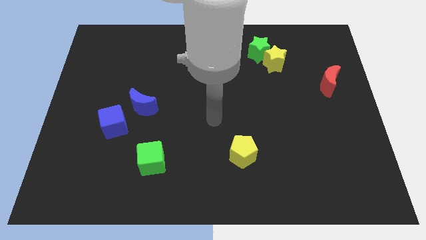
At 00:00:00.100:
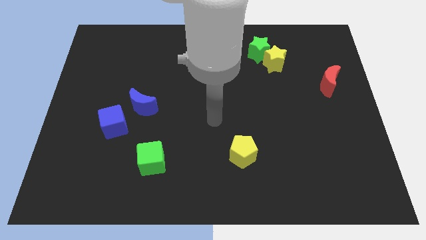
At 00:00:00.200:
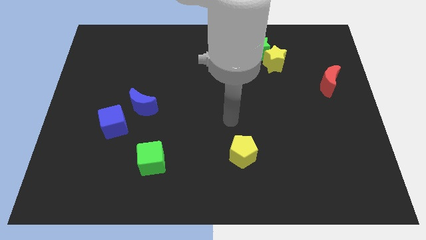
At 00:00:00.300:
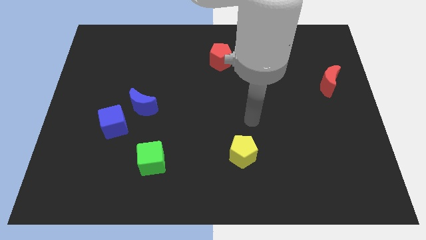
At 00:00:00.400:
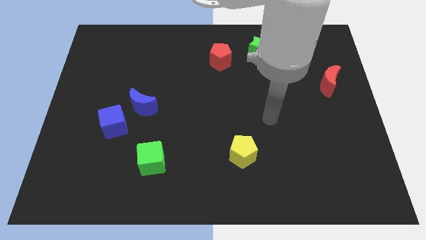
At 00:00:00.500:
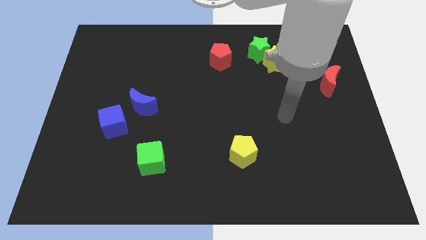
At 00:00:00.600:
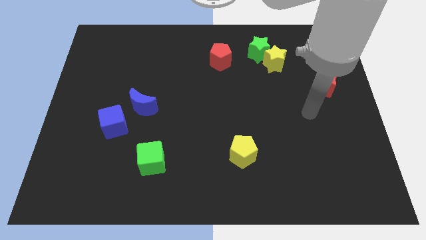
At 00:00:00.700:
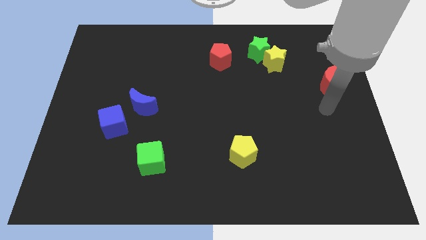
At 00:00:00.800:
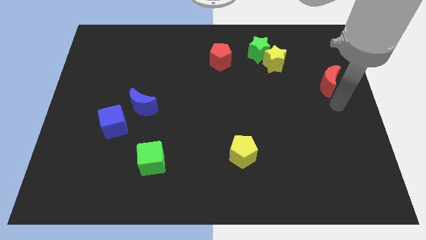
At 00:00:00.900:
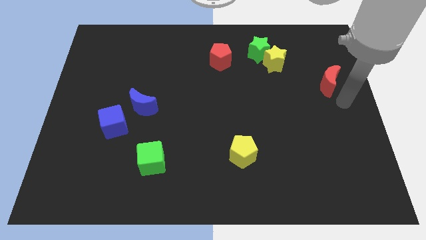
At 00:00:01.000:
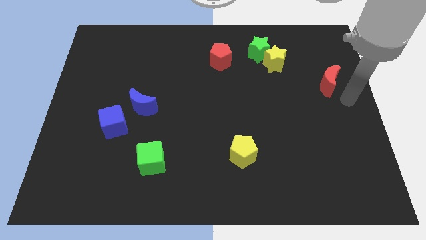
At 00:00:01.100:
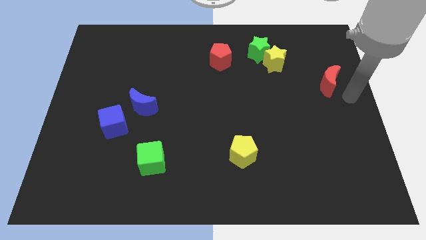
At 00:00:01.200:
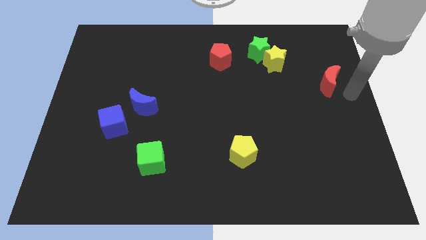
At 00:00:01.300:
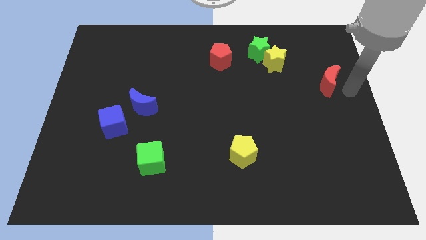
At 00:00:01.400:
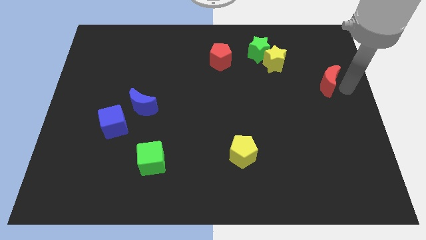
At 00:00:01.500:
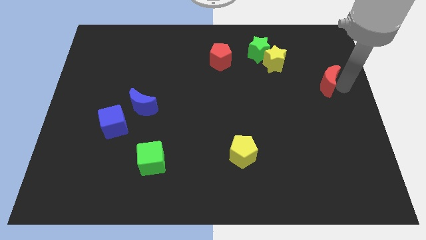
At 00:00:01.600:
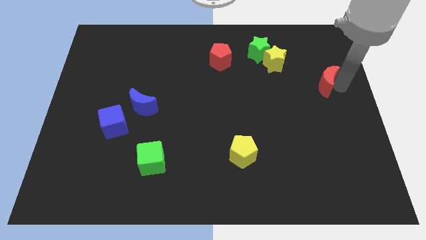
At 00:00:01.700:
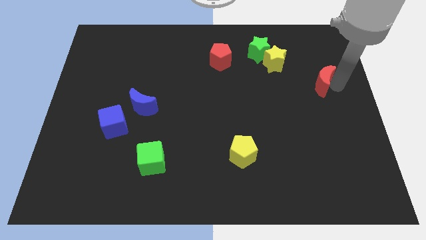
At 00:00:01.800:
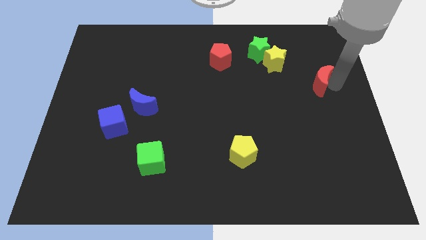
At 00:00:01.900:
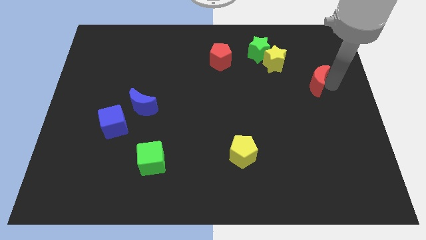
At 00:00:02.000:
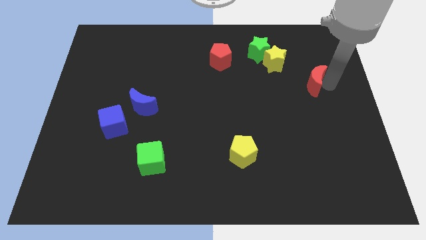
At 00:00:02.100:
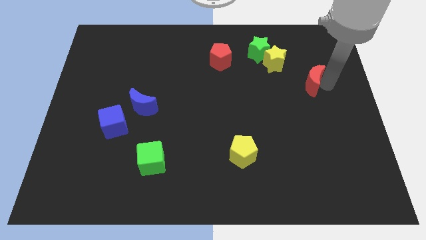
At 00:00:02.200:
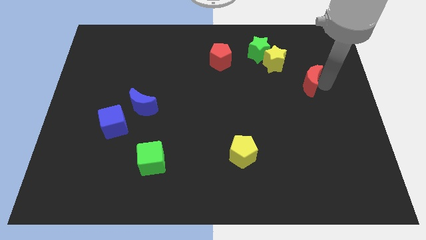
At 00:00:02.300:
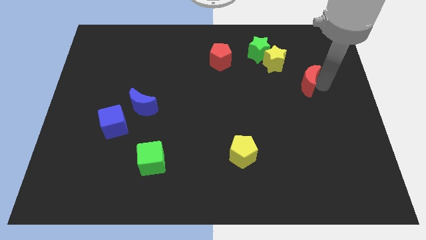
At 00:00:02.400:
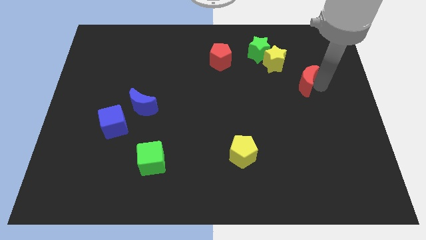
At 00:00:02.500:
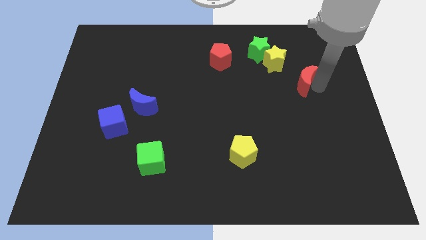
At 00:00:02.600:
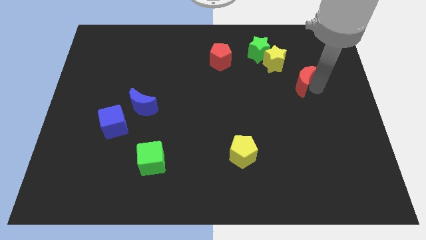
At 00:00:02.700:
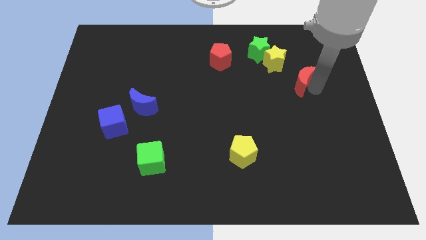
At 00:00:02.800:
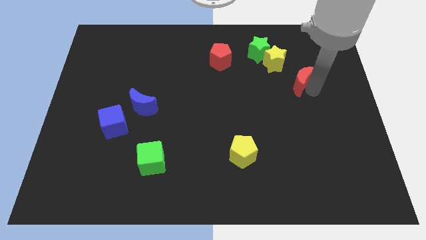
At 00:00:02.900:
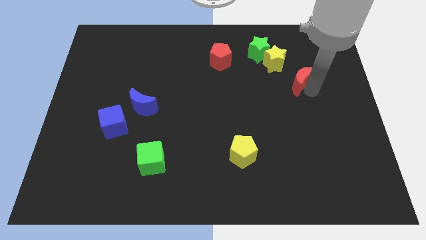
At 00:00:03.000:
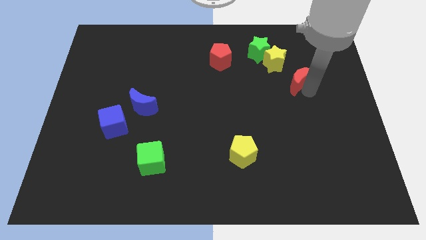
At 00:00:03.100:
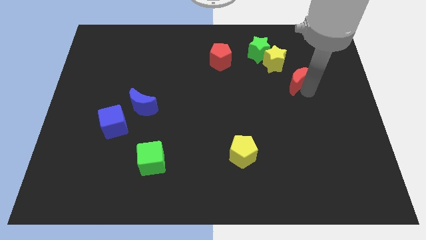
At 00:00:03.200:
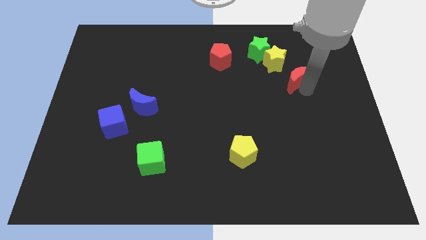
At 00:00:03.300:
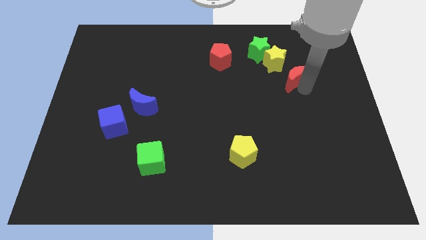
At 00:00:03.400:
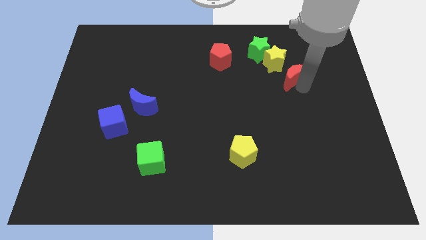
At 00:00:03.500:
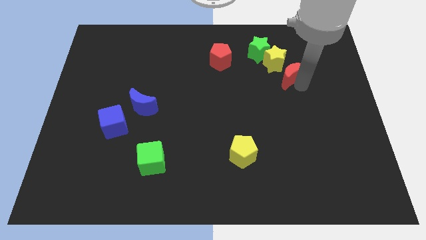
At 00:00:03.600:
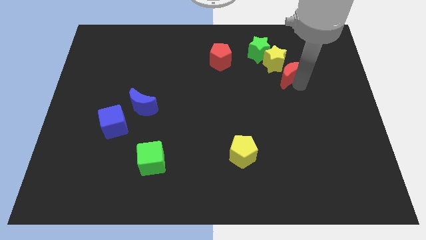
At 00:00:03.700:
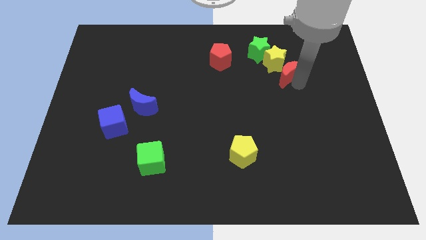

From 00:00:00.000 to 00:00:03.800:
move the red moon towards the yellow star

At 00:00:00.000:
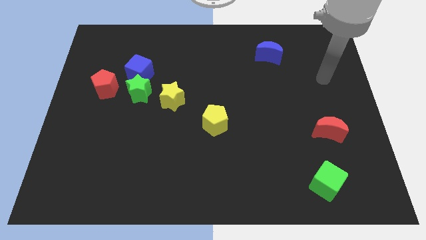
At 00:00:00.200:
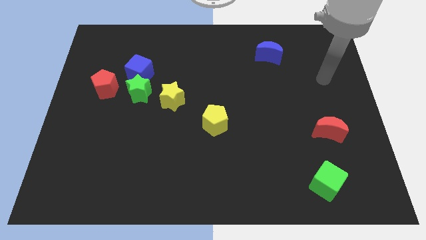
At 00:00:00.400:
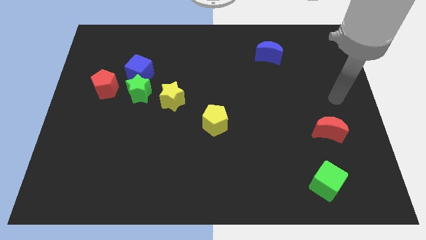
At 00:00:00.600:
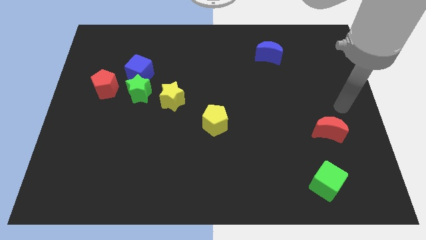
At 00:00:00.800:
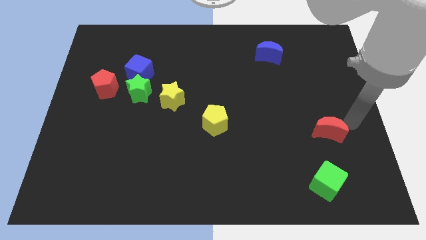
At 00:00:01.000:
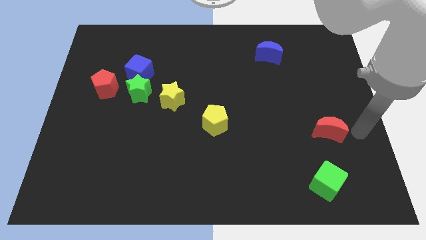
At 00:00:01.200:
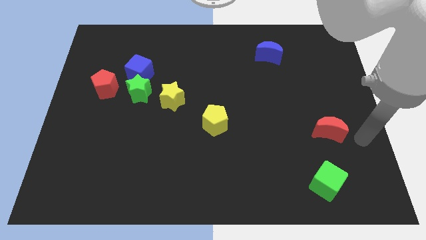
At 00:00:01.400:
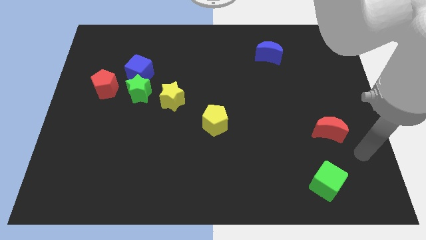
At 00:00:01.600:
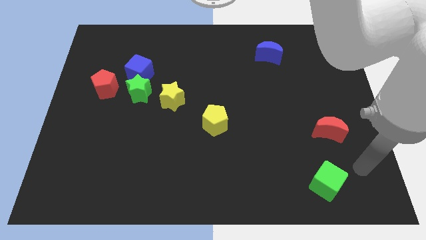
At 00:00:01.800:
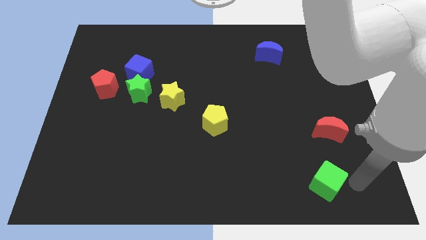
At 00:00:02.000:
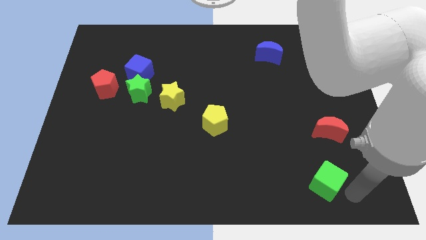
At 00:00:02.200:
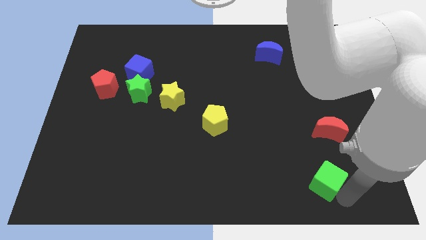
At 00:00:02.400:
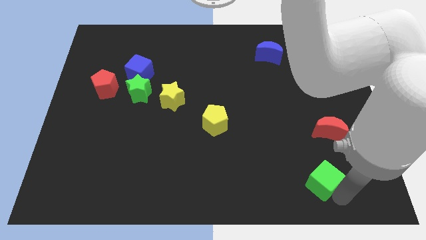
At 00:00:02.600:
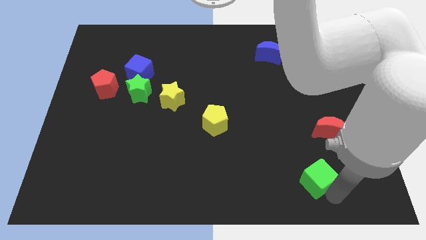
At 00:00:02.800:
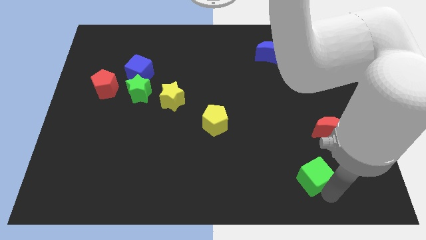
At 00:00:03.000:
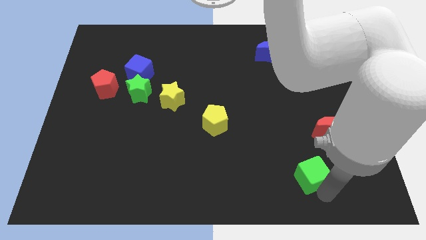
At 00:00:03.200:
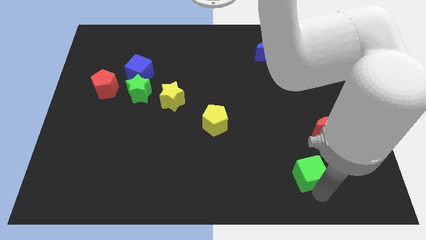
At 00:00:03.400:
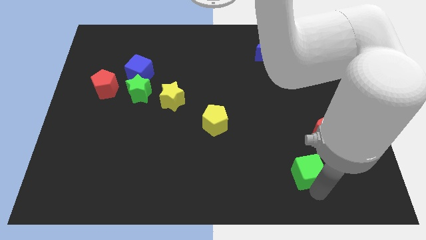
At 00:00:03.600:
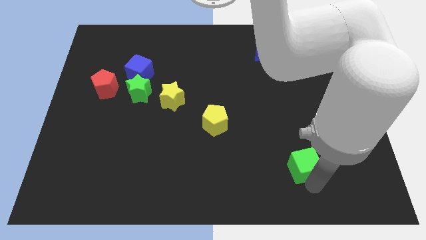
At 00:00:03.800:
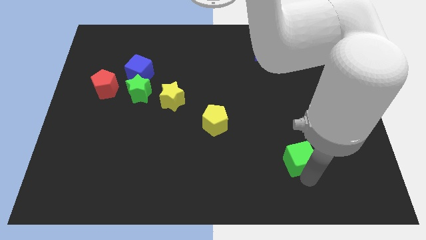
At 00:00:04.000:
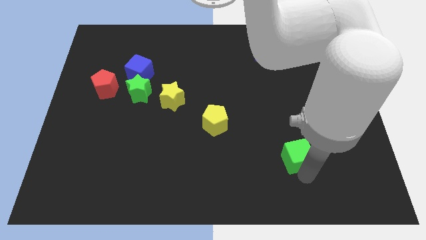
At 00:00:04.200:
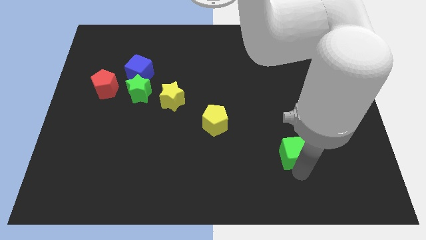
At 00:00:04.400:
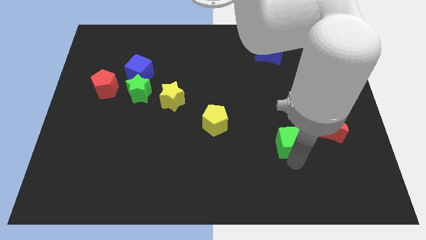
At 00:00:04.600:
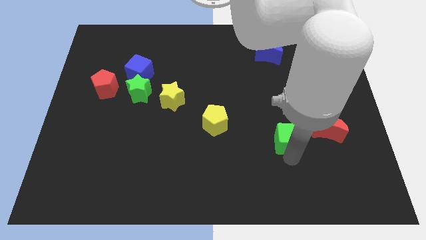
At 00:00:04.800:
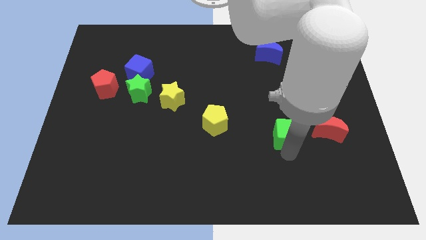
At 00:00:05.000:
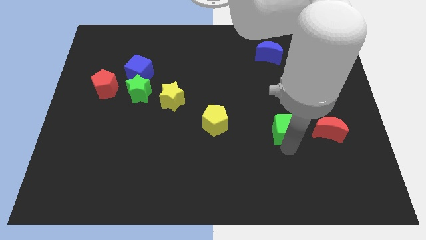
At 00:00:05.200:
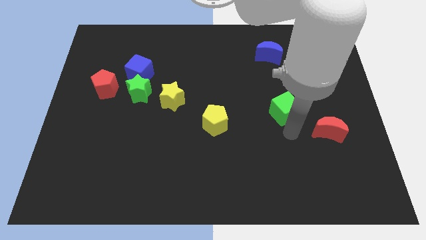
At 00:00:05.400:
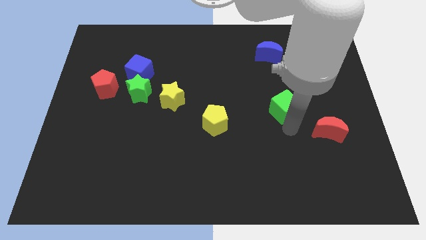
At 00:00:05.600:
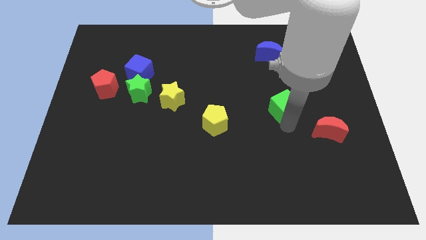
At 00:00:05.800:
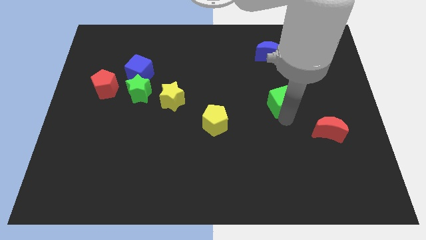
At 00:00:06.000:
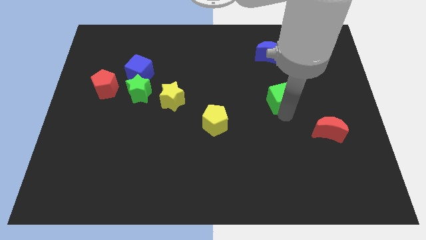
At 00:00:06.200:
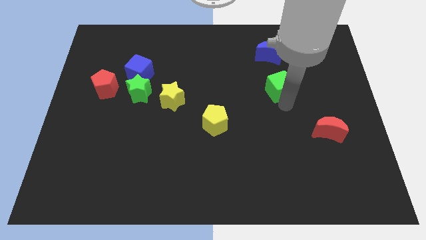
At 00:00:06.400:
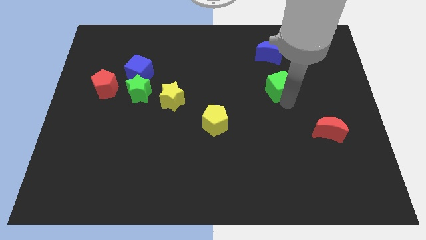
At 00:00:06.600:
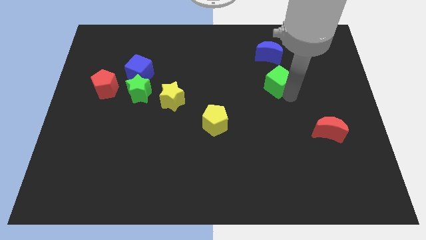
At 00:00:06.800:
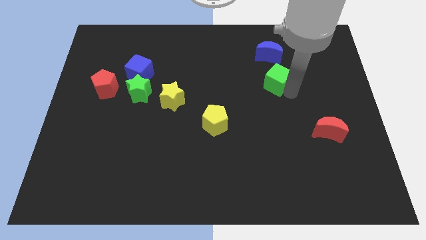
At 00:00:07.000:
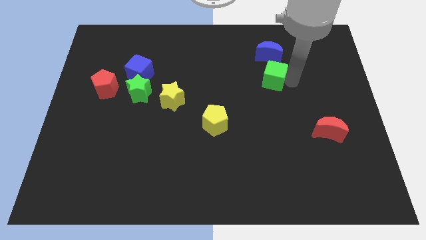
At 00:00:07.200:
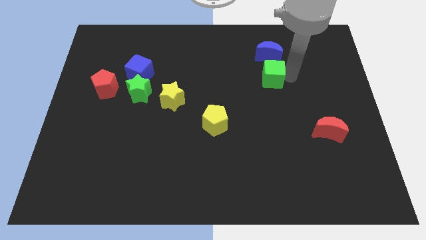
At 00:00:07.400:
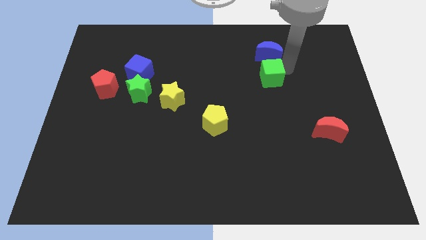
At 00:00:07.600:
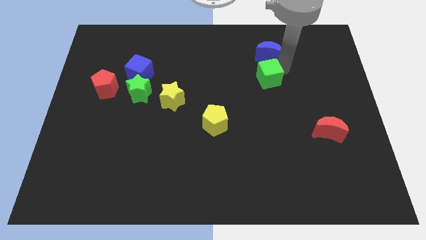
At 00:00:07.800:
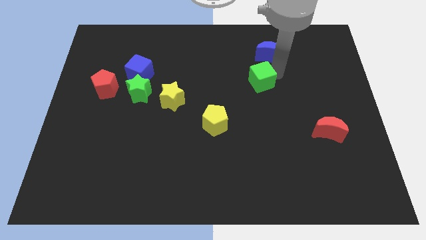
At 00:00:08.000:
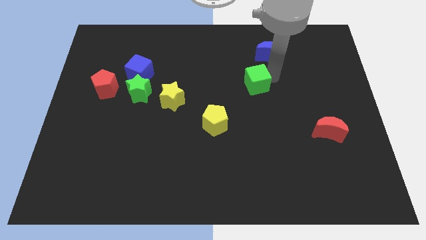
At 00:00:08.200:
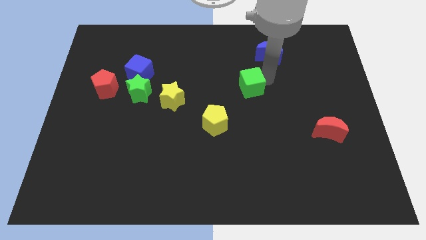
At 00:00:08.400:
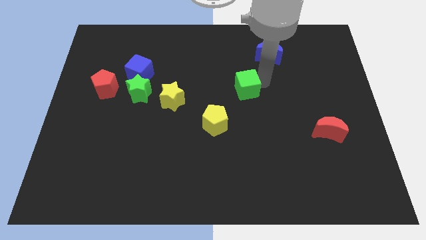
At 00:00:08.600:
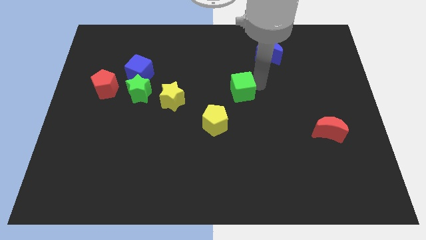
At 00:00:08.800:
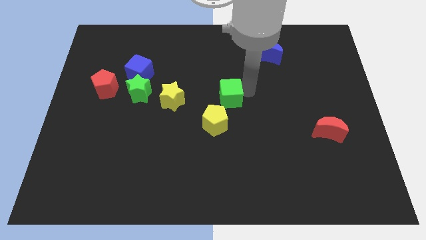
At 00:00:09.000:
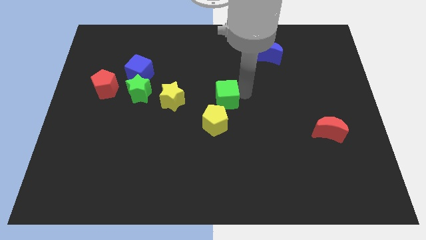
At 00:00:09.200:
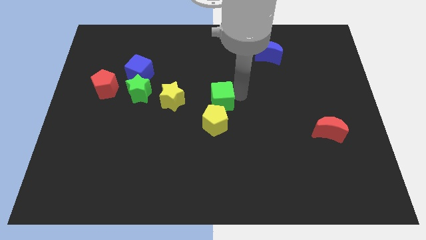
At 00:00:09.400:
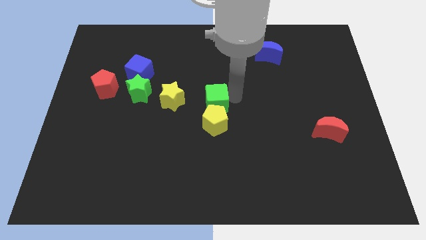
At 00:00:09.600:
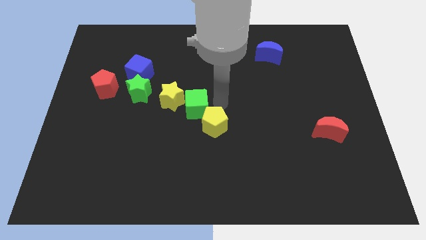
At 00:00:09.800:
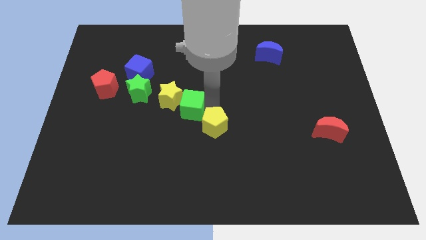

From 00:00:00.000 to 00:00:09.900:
put the green cube to the yellow star
